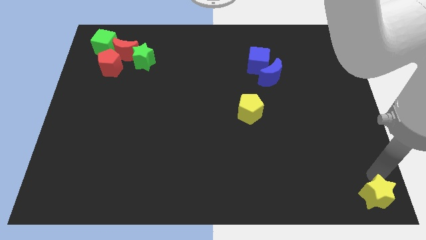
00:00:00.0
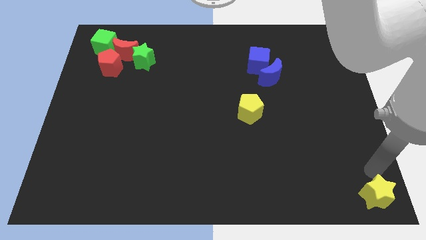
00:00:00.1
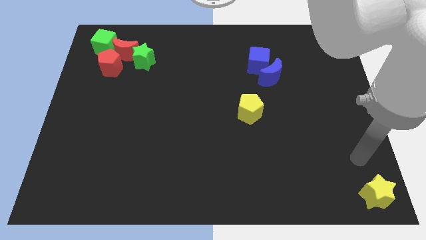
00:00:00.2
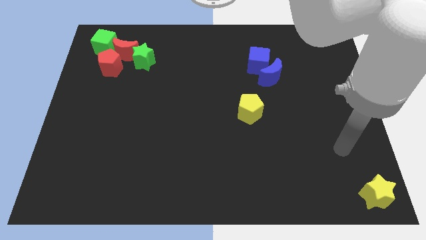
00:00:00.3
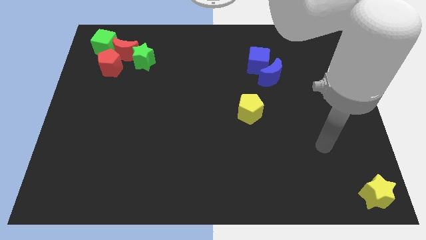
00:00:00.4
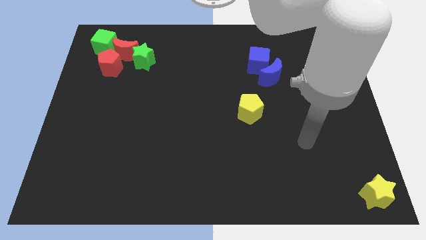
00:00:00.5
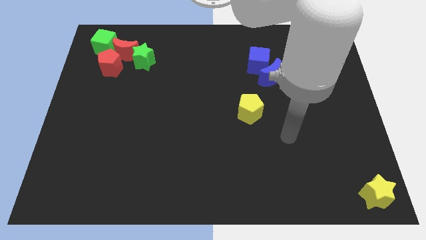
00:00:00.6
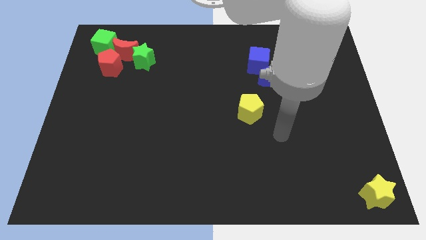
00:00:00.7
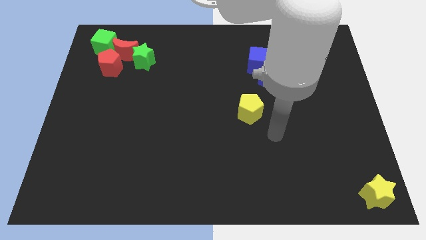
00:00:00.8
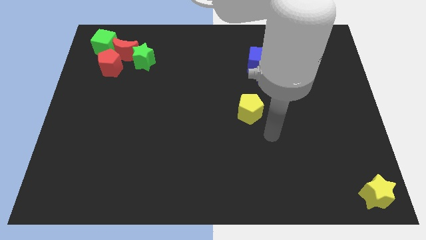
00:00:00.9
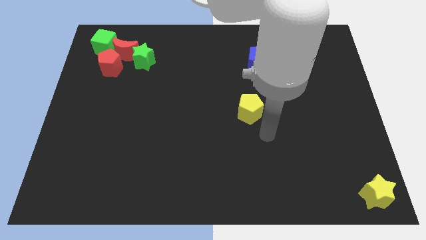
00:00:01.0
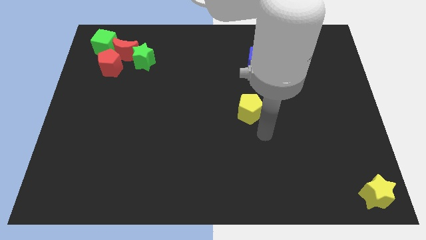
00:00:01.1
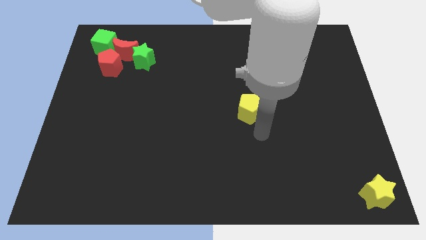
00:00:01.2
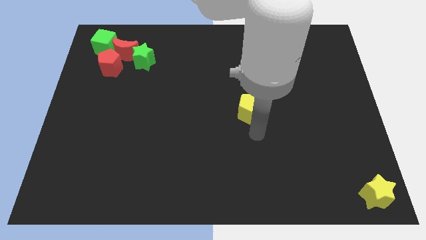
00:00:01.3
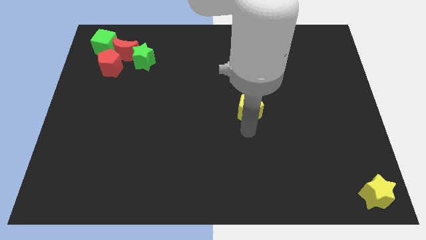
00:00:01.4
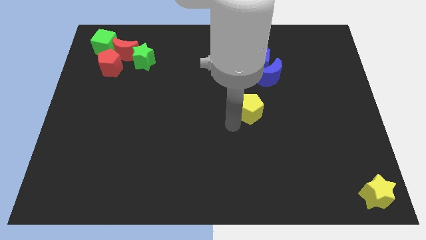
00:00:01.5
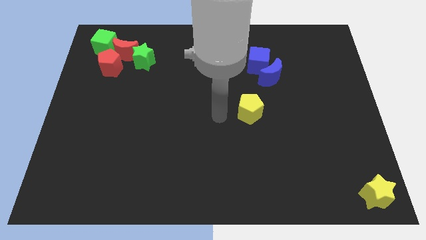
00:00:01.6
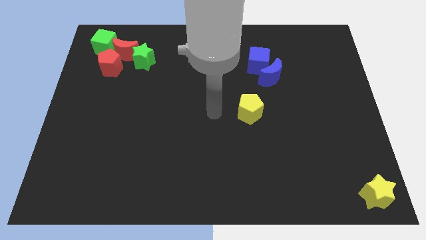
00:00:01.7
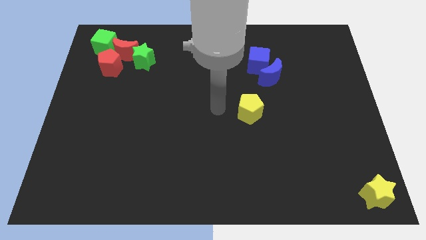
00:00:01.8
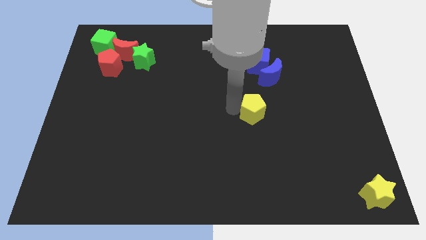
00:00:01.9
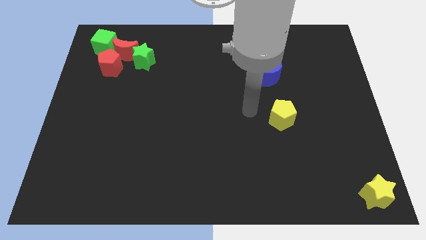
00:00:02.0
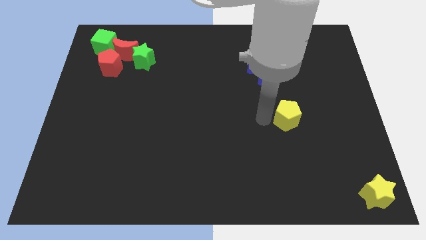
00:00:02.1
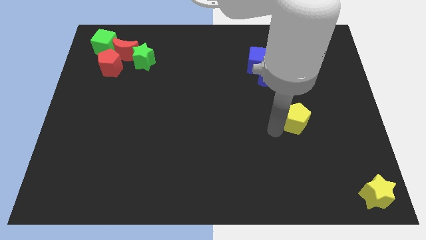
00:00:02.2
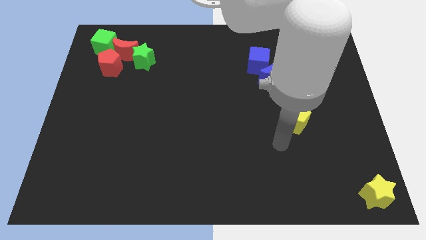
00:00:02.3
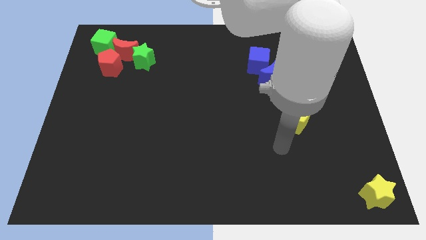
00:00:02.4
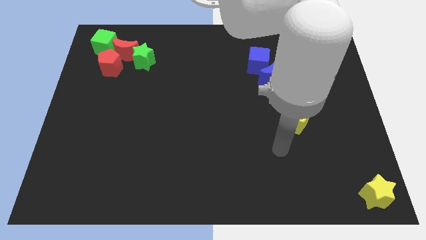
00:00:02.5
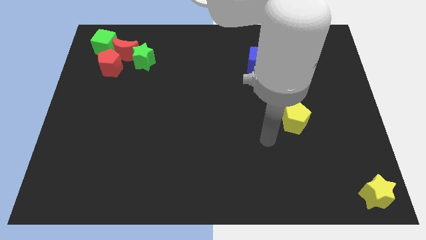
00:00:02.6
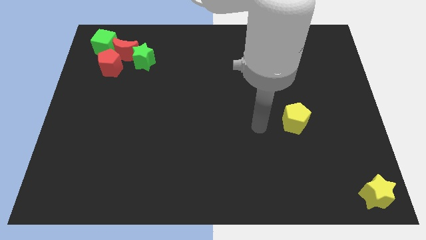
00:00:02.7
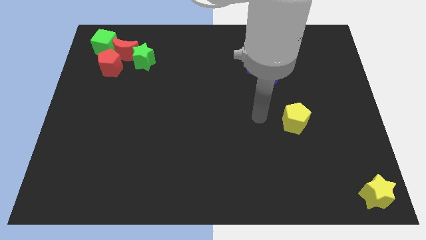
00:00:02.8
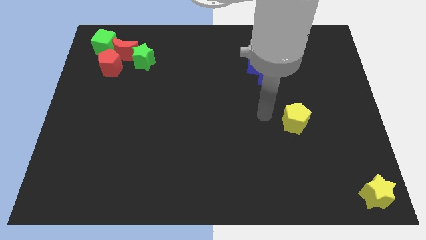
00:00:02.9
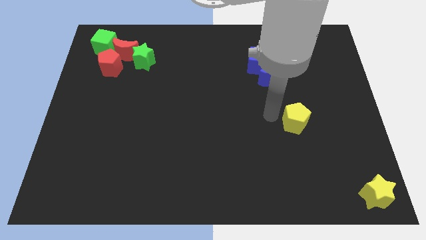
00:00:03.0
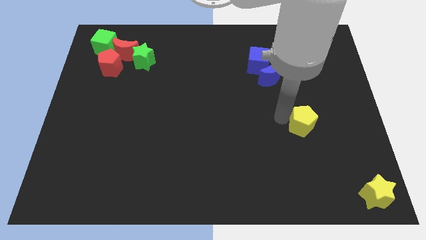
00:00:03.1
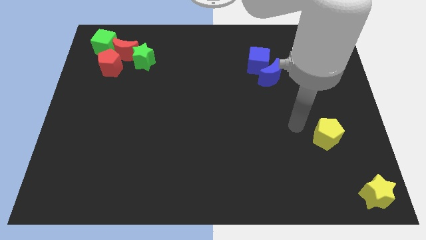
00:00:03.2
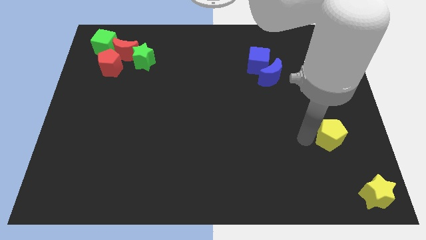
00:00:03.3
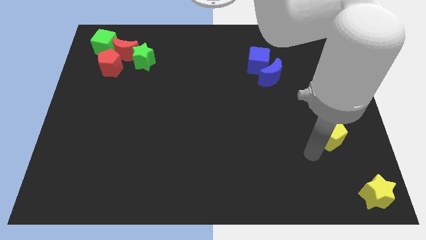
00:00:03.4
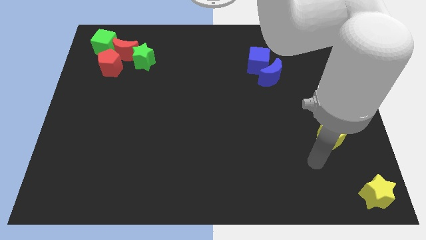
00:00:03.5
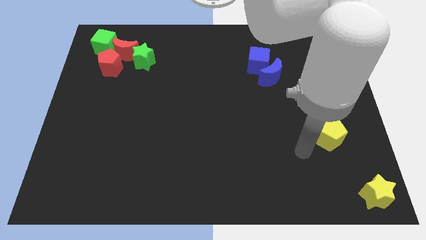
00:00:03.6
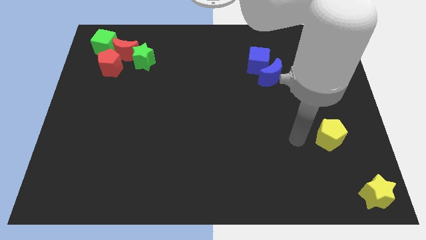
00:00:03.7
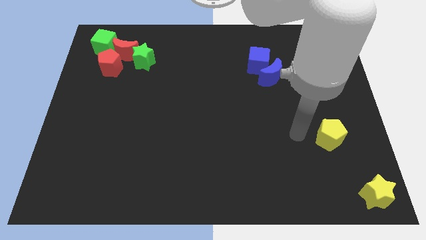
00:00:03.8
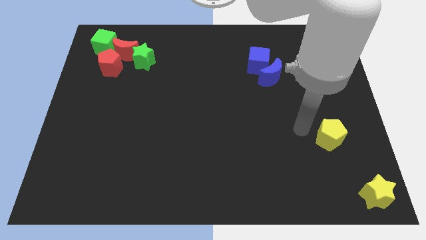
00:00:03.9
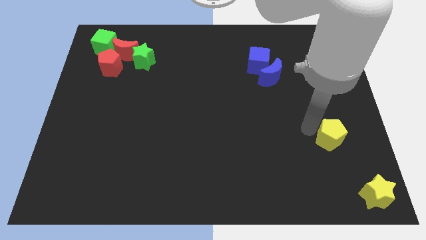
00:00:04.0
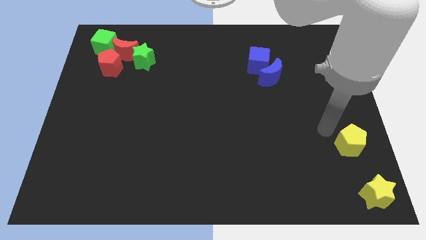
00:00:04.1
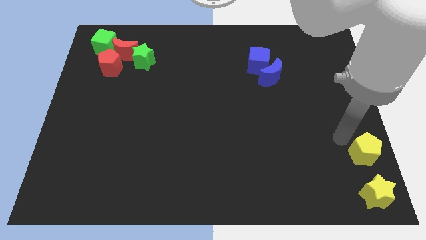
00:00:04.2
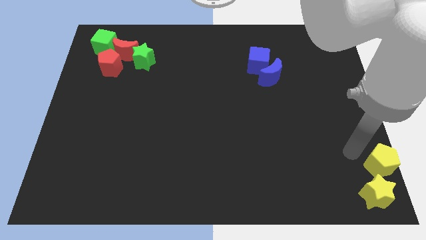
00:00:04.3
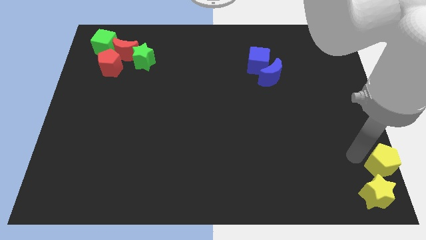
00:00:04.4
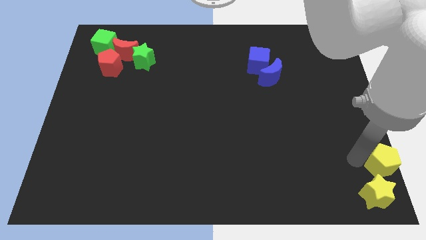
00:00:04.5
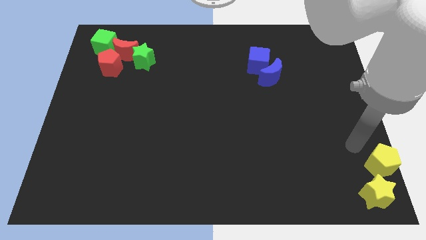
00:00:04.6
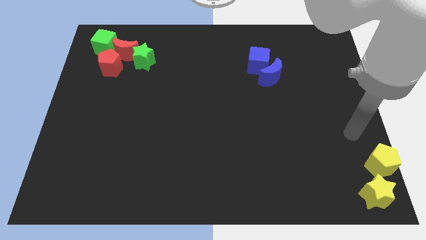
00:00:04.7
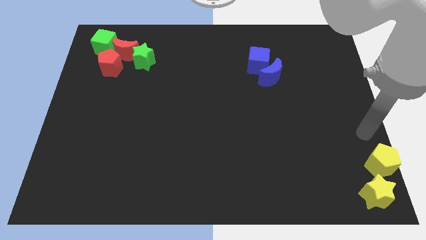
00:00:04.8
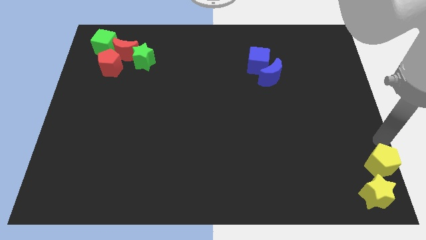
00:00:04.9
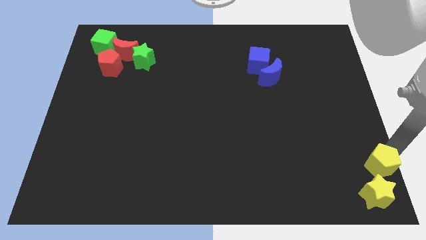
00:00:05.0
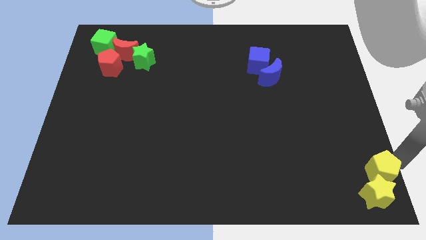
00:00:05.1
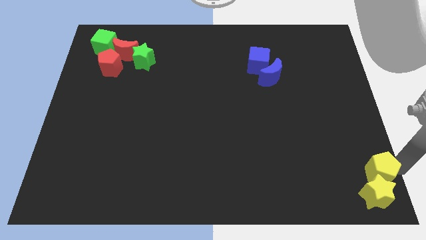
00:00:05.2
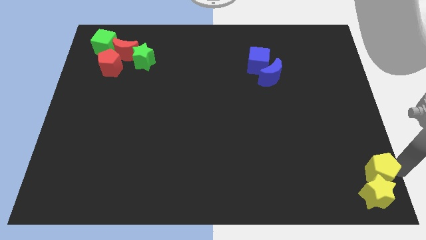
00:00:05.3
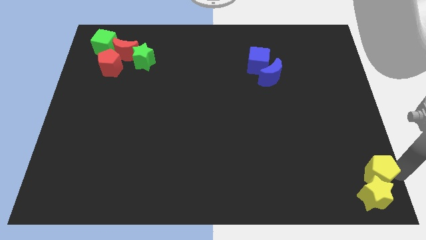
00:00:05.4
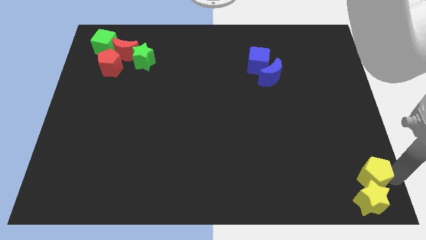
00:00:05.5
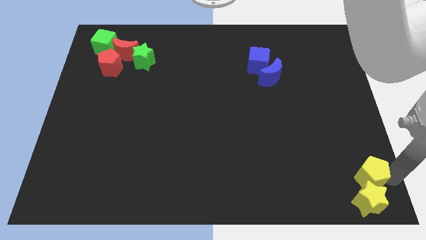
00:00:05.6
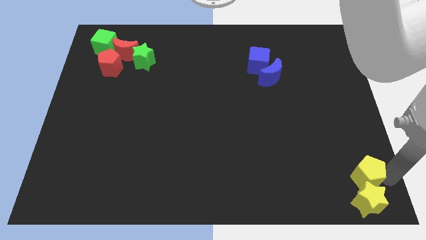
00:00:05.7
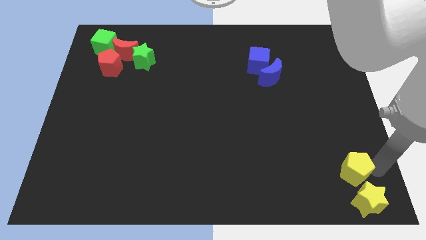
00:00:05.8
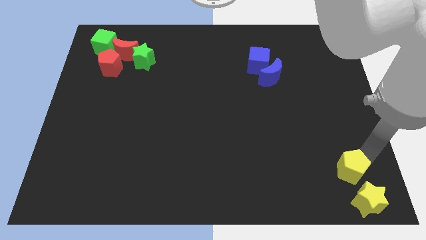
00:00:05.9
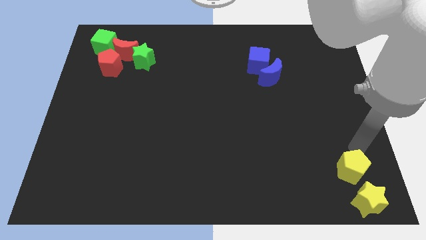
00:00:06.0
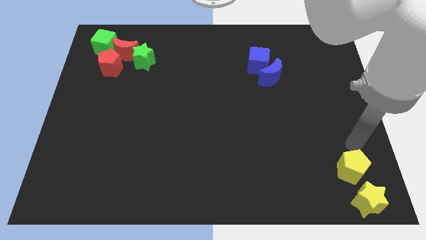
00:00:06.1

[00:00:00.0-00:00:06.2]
push the yellow pentagon towards the yellow star

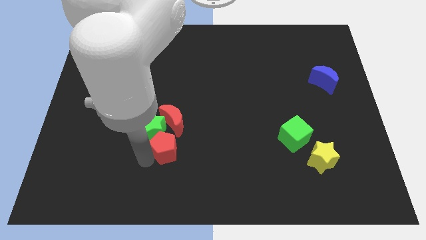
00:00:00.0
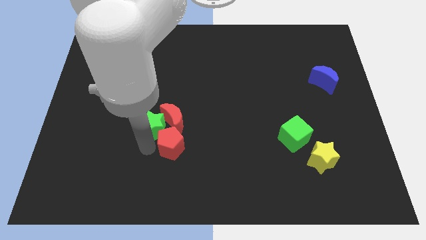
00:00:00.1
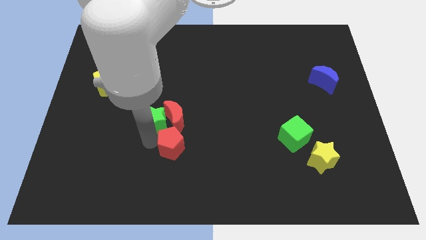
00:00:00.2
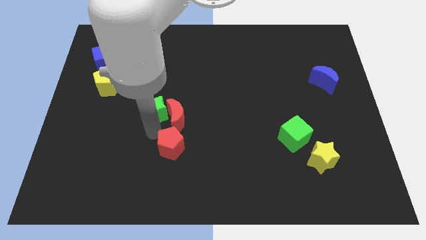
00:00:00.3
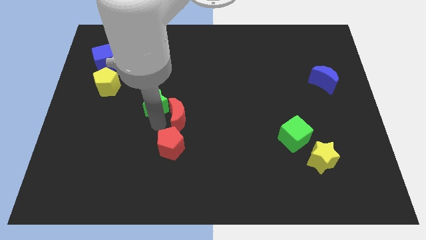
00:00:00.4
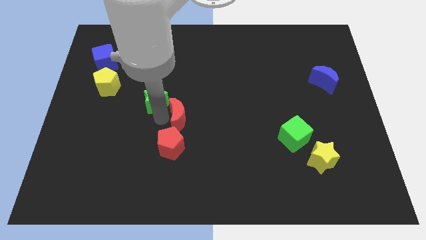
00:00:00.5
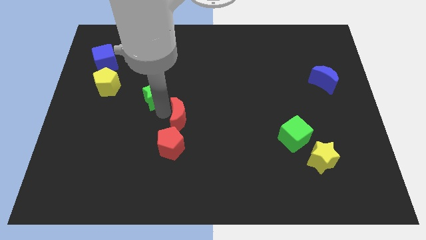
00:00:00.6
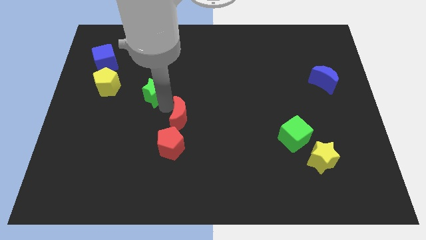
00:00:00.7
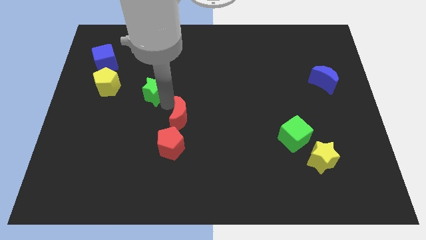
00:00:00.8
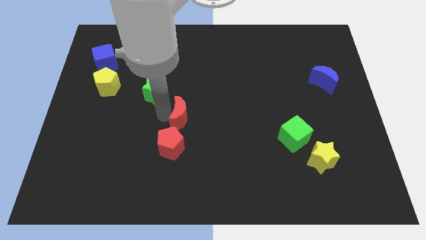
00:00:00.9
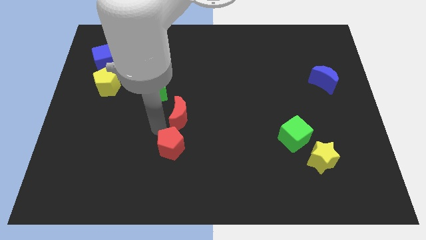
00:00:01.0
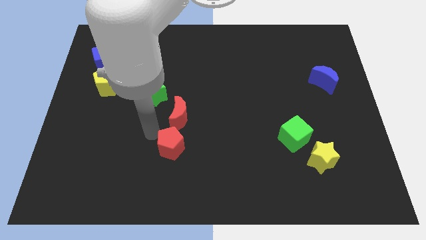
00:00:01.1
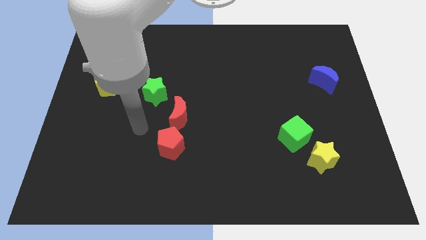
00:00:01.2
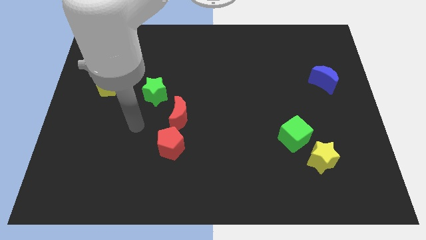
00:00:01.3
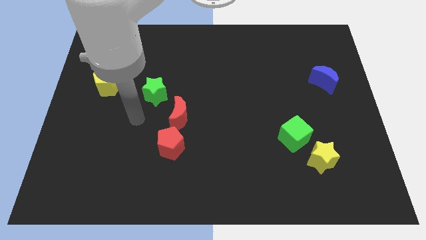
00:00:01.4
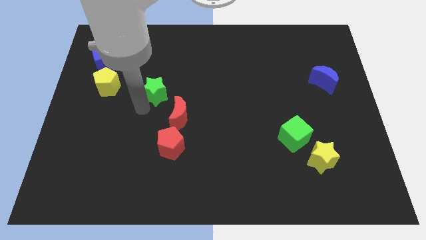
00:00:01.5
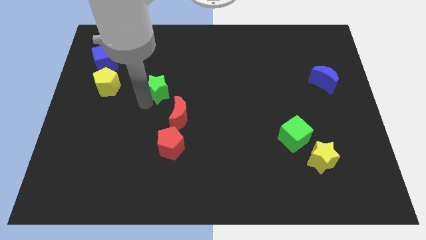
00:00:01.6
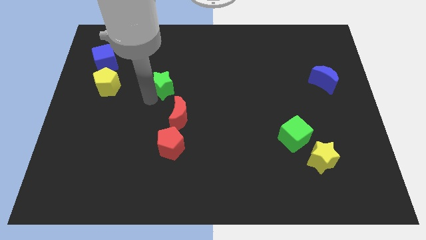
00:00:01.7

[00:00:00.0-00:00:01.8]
push the green star to the right of the yellow pentagon

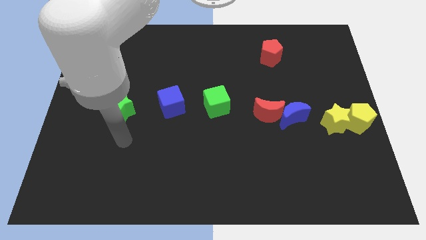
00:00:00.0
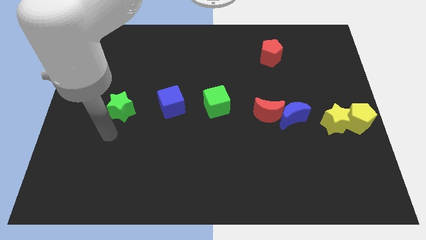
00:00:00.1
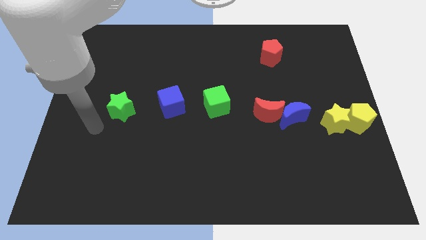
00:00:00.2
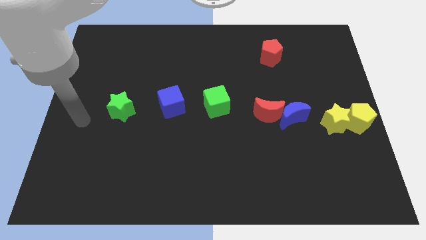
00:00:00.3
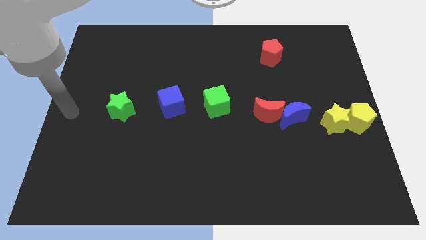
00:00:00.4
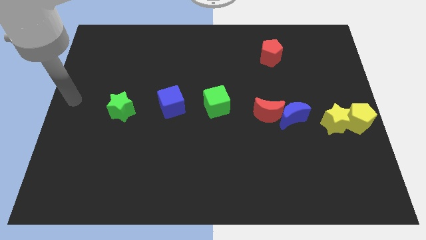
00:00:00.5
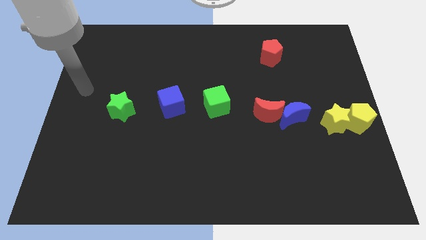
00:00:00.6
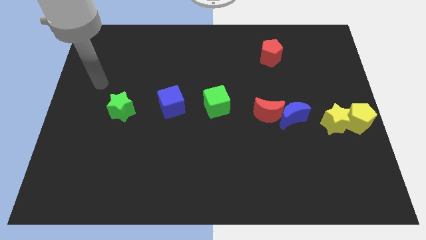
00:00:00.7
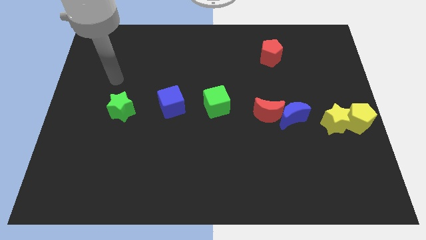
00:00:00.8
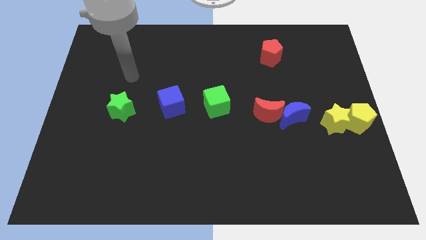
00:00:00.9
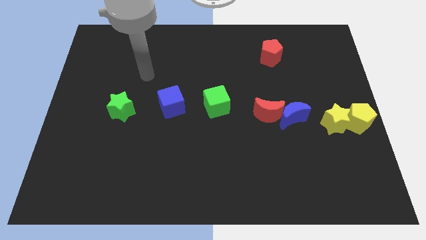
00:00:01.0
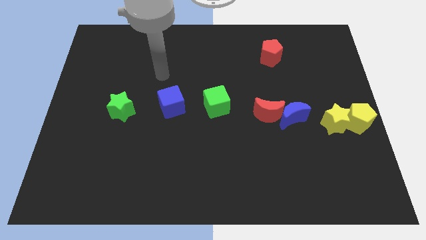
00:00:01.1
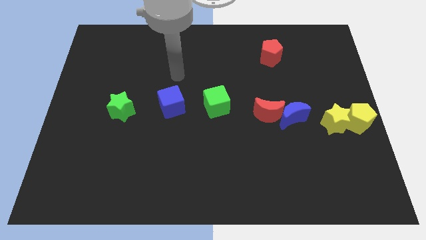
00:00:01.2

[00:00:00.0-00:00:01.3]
point the arm above the blue cube
